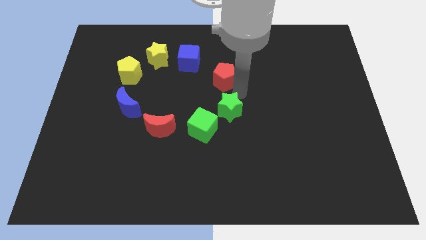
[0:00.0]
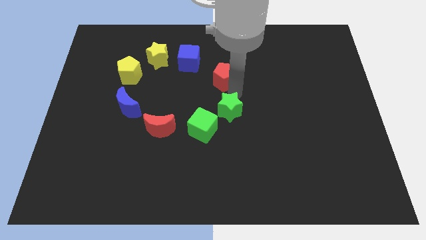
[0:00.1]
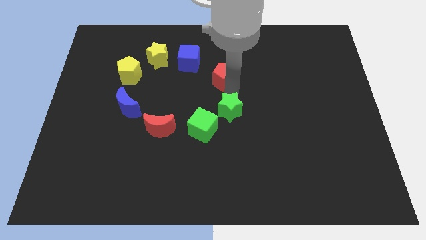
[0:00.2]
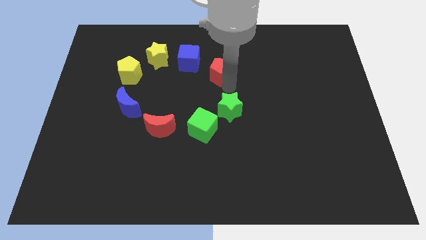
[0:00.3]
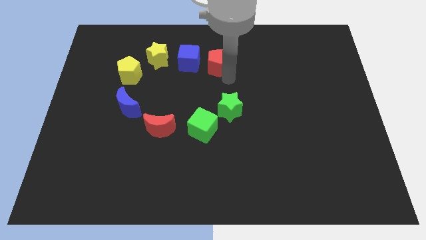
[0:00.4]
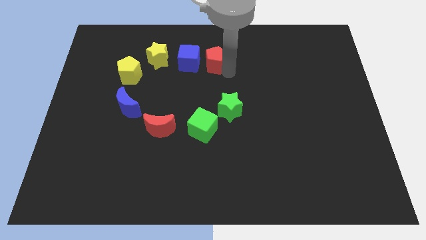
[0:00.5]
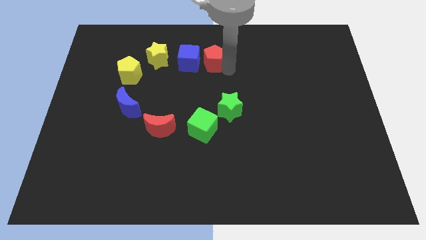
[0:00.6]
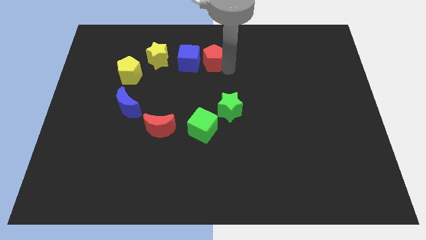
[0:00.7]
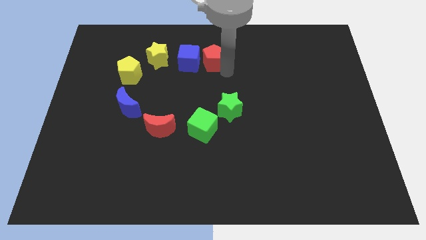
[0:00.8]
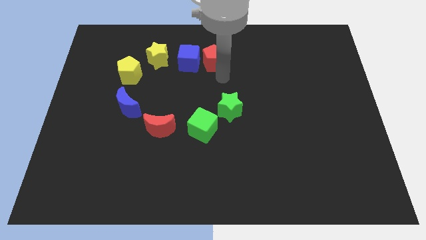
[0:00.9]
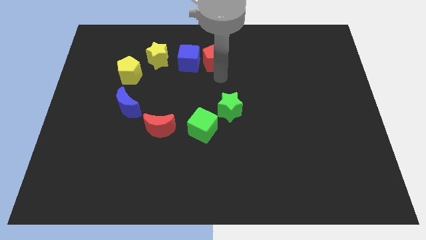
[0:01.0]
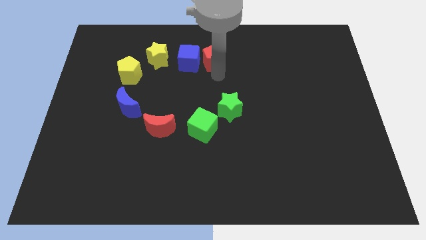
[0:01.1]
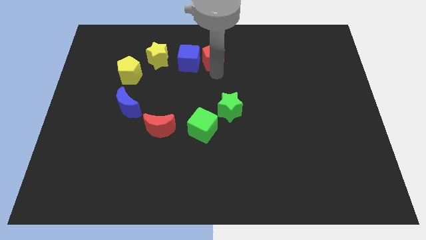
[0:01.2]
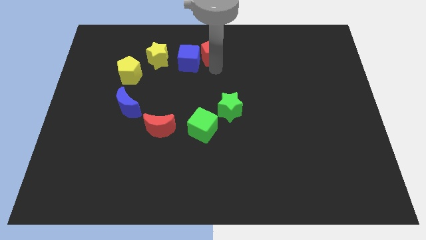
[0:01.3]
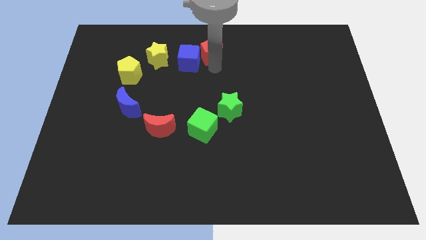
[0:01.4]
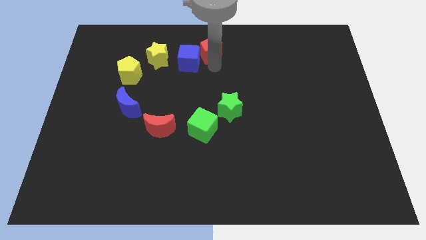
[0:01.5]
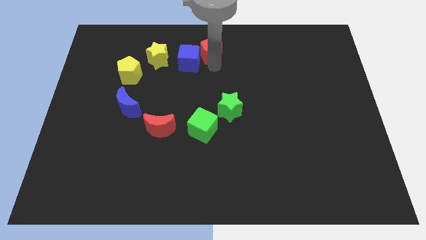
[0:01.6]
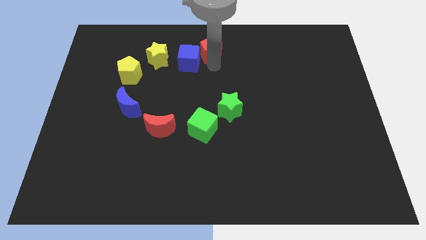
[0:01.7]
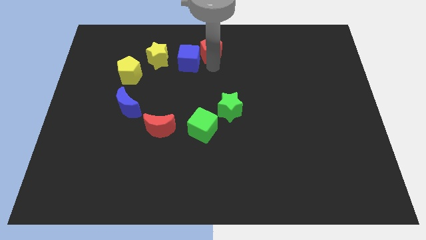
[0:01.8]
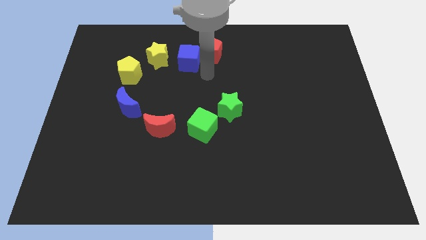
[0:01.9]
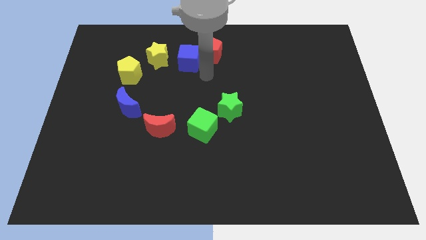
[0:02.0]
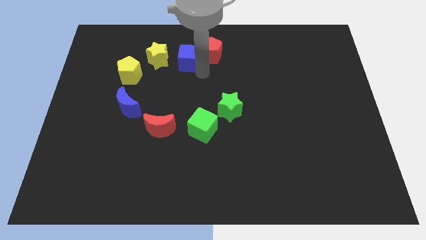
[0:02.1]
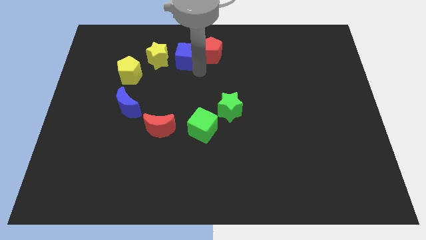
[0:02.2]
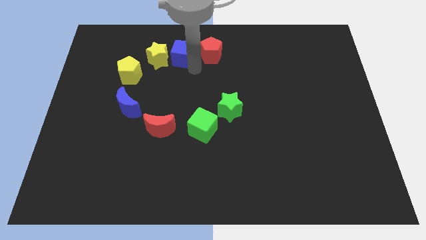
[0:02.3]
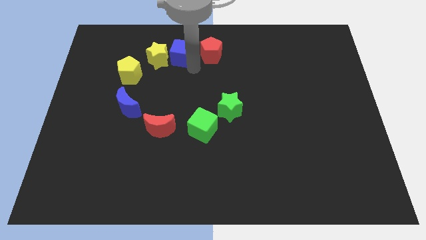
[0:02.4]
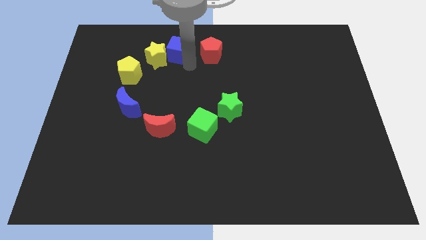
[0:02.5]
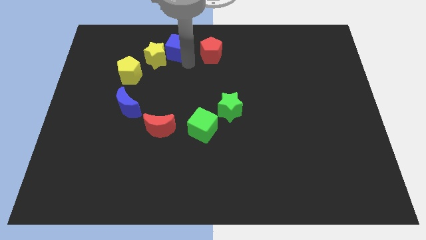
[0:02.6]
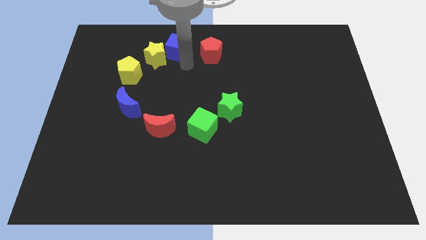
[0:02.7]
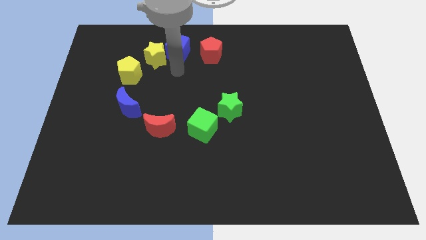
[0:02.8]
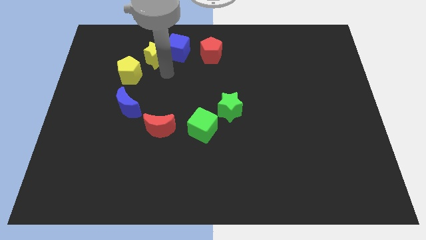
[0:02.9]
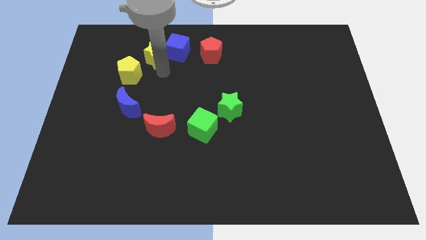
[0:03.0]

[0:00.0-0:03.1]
slightly push the blue cube upwards

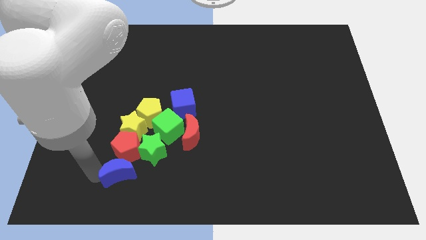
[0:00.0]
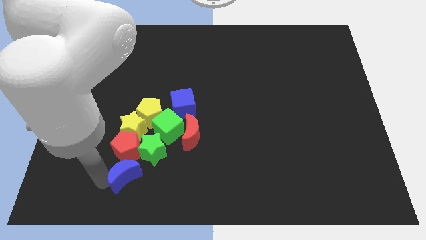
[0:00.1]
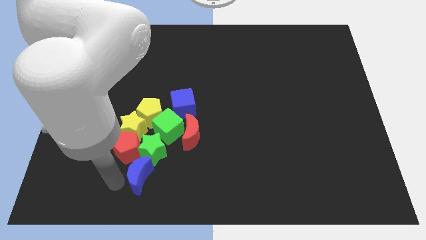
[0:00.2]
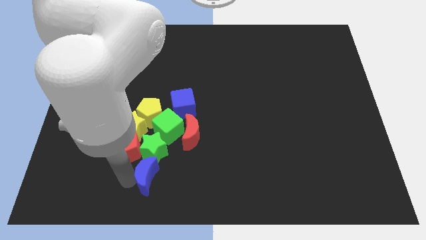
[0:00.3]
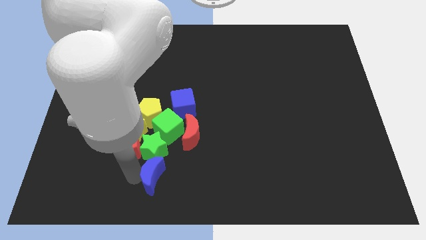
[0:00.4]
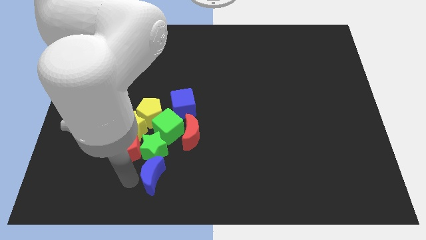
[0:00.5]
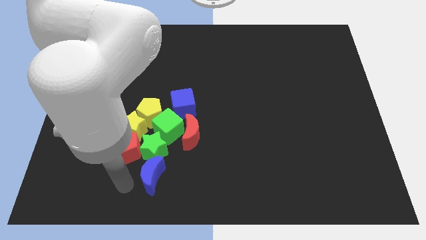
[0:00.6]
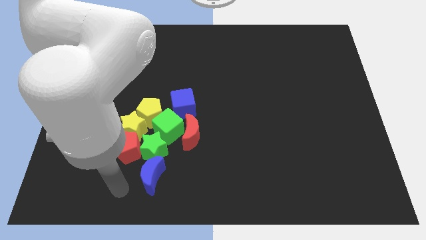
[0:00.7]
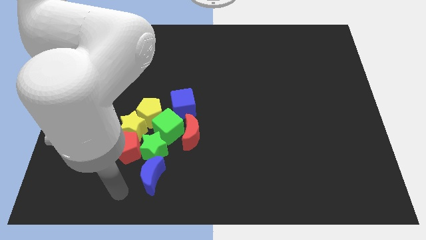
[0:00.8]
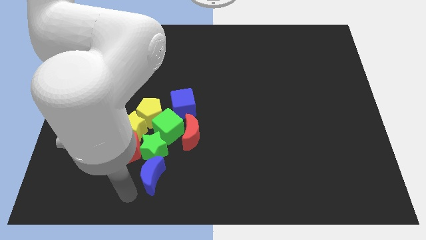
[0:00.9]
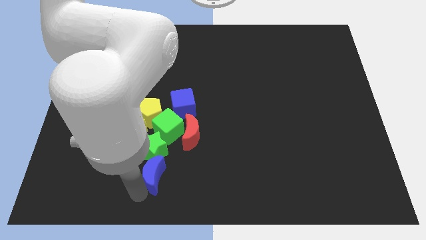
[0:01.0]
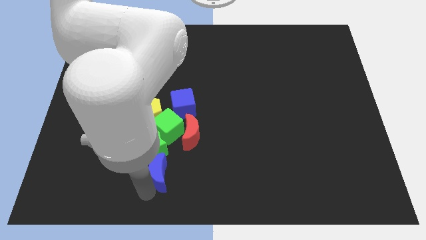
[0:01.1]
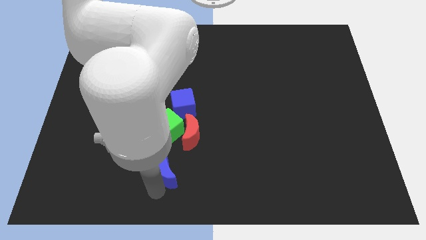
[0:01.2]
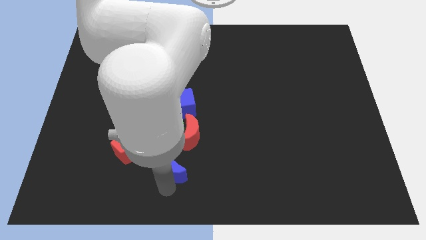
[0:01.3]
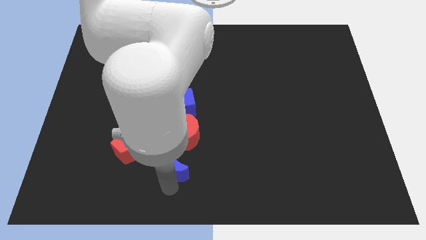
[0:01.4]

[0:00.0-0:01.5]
adjust the blue crescent to form a group

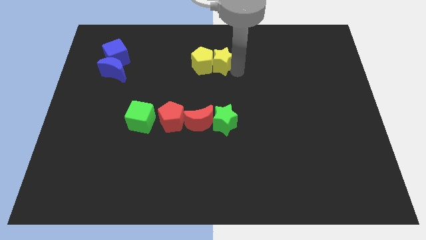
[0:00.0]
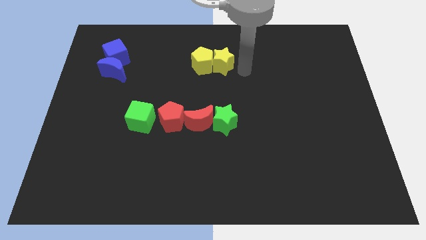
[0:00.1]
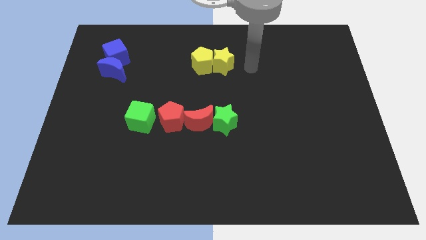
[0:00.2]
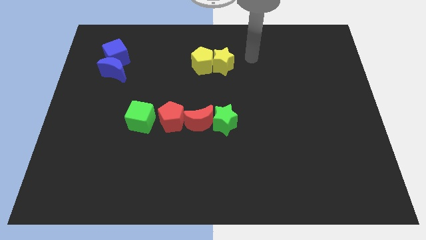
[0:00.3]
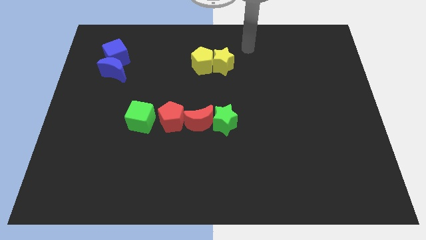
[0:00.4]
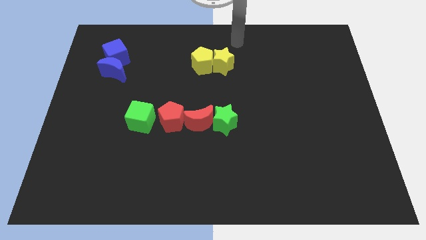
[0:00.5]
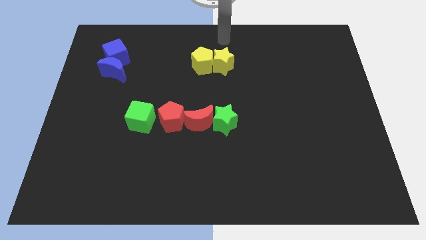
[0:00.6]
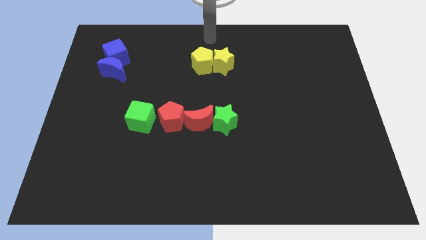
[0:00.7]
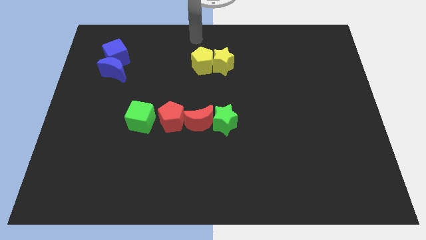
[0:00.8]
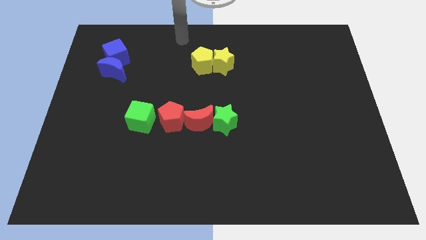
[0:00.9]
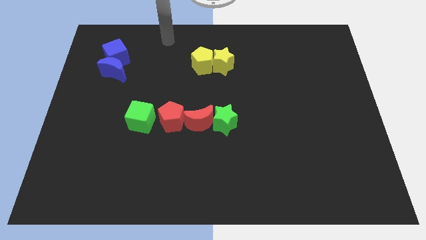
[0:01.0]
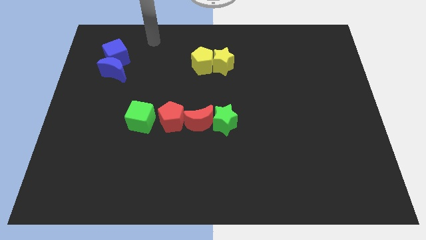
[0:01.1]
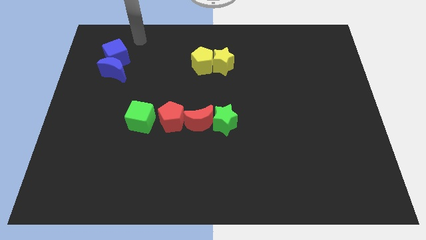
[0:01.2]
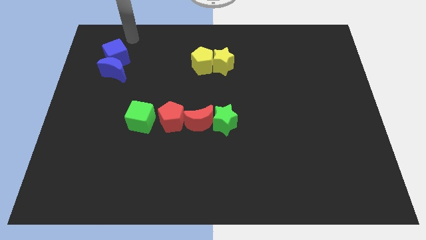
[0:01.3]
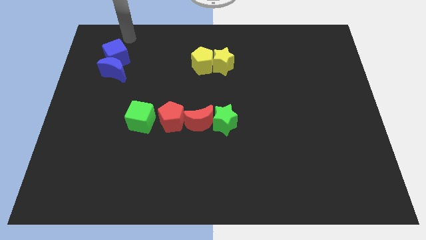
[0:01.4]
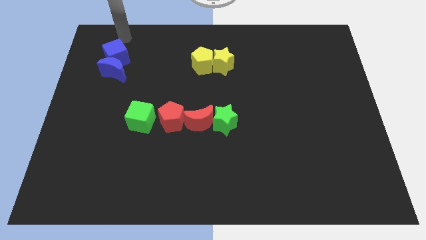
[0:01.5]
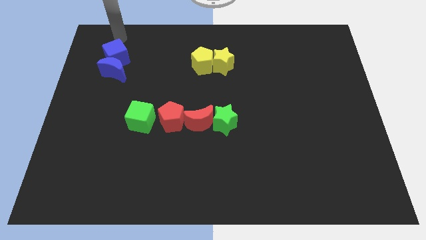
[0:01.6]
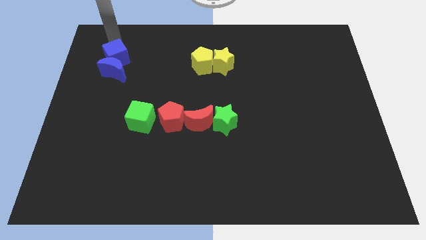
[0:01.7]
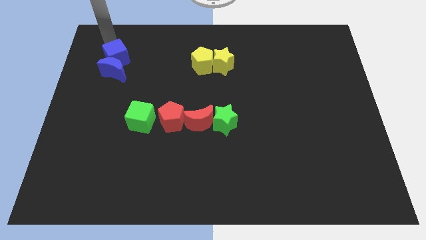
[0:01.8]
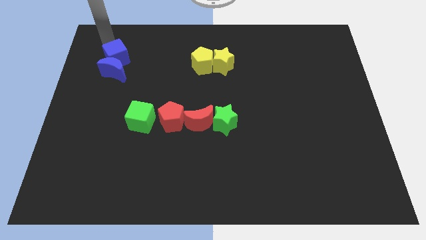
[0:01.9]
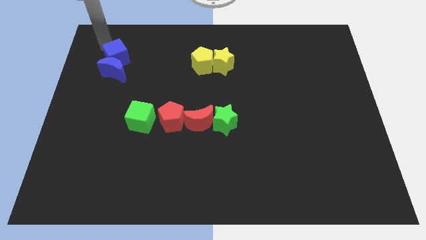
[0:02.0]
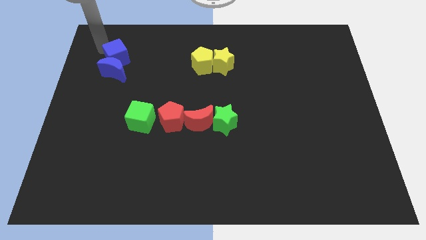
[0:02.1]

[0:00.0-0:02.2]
move your arm away from the yellow star

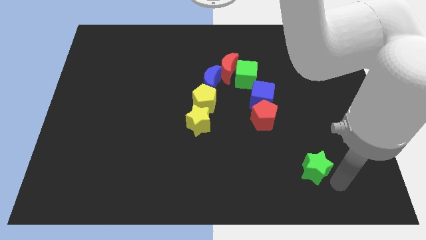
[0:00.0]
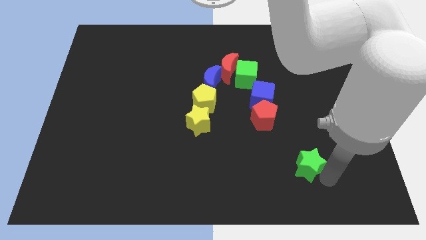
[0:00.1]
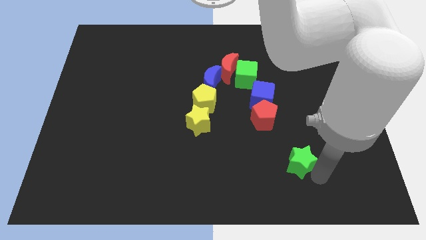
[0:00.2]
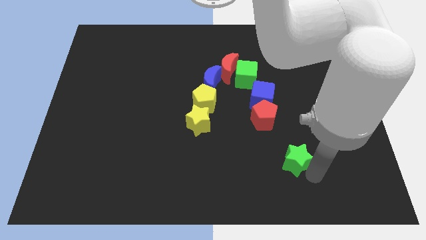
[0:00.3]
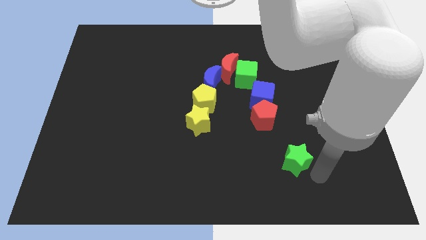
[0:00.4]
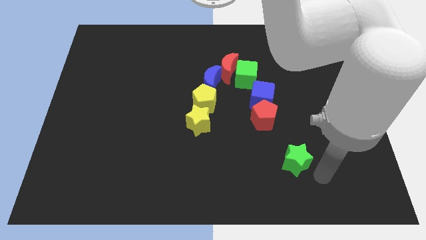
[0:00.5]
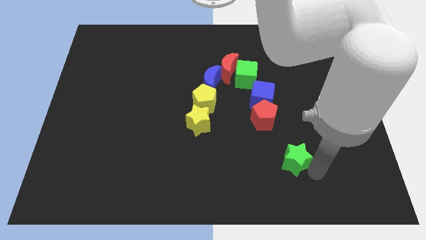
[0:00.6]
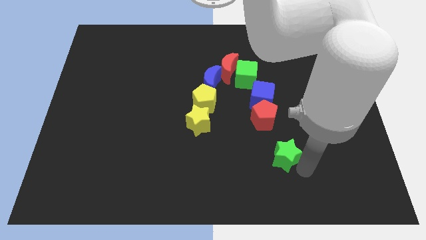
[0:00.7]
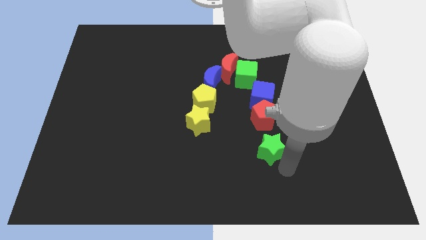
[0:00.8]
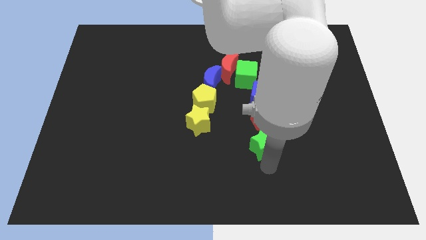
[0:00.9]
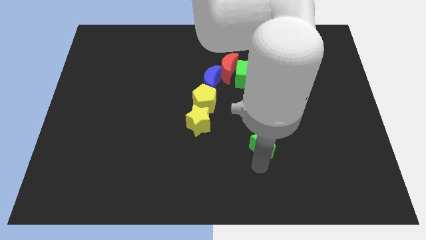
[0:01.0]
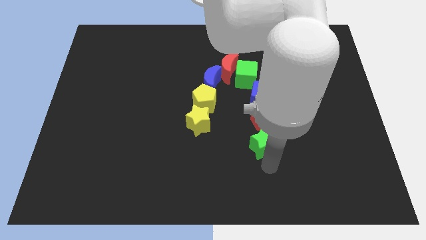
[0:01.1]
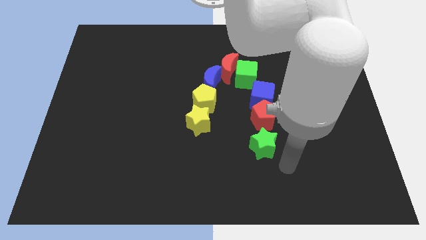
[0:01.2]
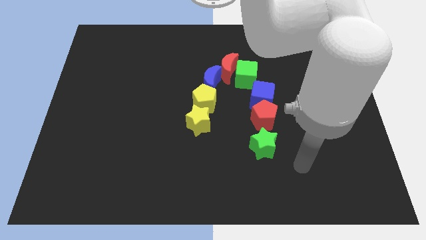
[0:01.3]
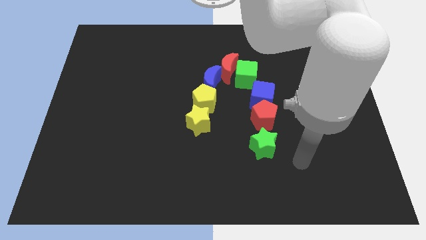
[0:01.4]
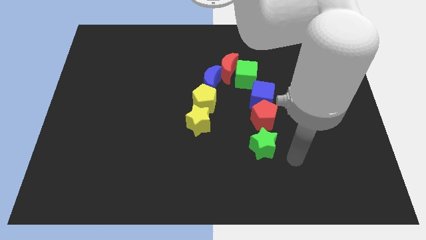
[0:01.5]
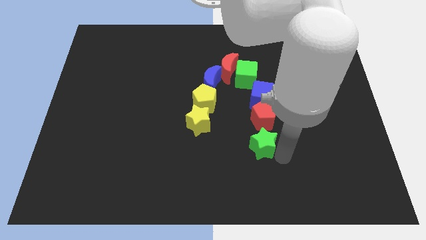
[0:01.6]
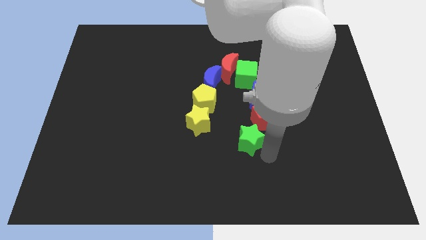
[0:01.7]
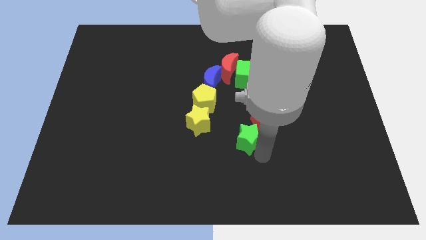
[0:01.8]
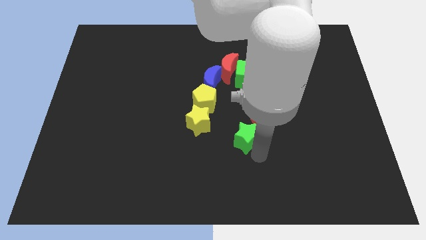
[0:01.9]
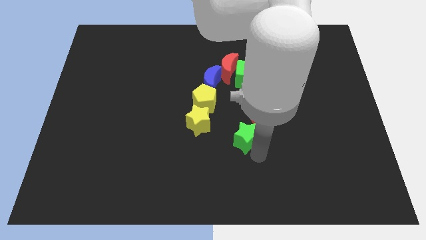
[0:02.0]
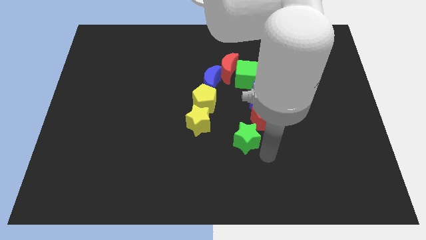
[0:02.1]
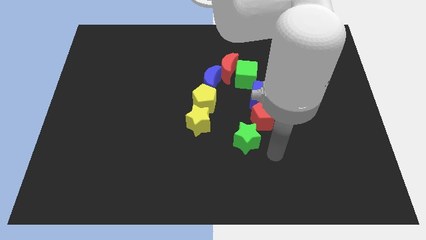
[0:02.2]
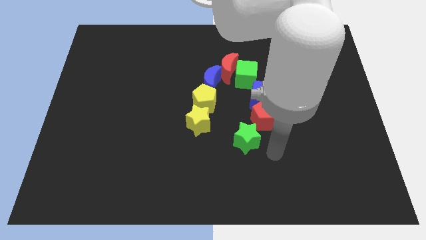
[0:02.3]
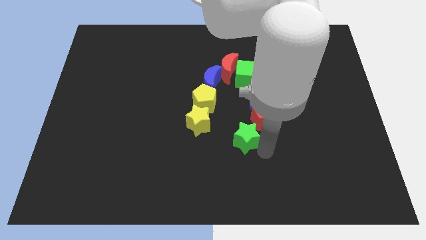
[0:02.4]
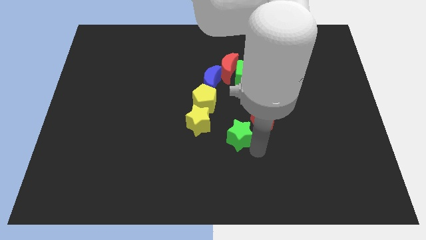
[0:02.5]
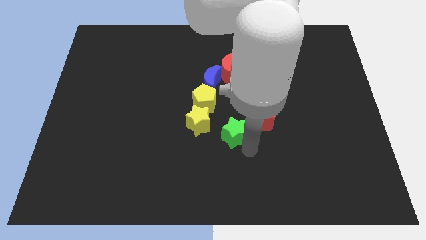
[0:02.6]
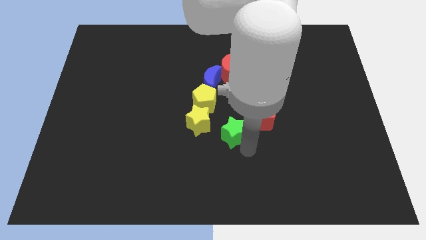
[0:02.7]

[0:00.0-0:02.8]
move green star between yellow star and red pentagon
